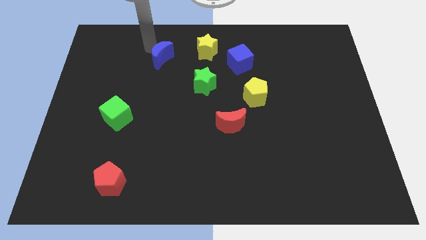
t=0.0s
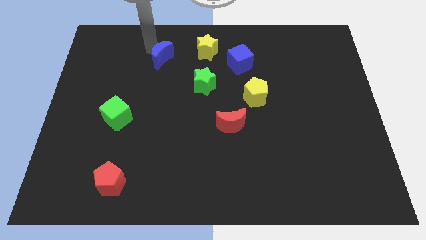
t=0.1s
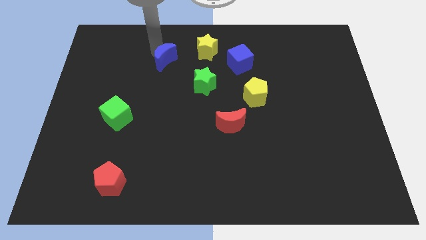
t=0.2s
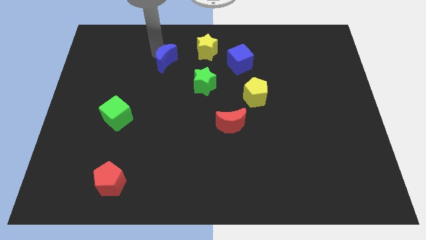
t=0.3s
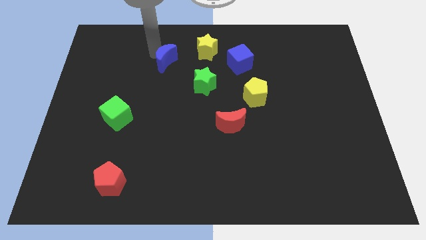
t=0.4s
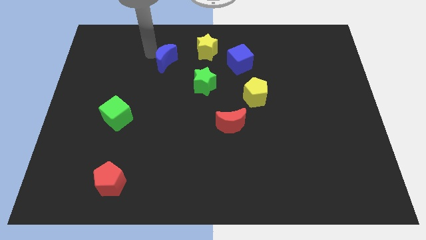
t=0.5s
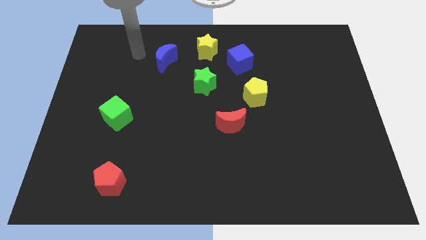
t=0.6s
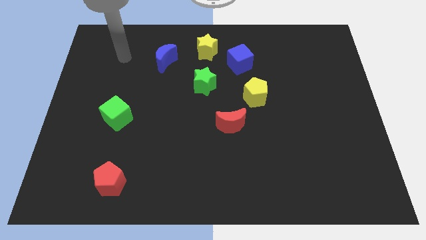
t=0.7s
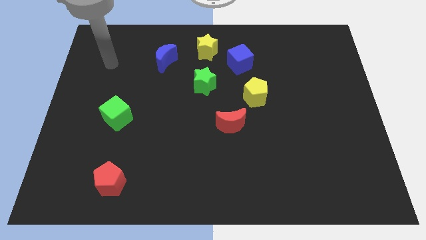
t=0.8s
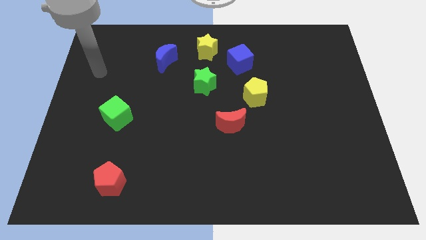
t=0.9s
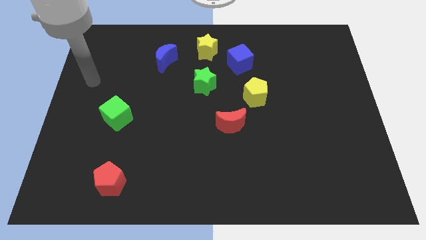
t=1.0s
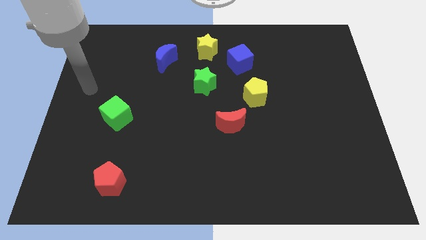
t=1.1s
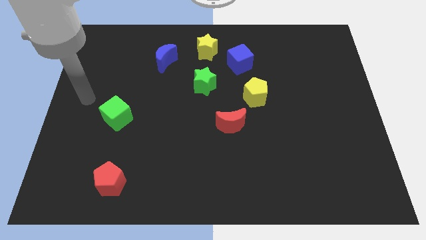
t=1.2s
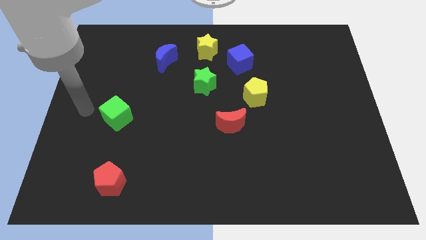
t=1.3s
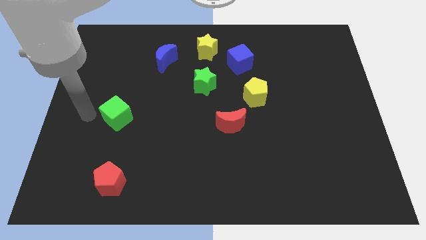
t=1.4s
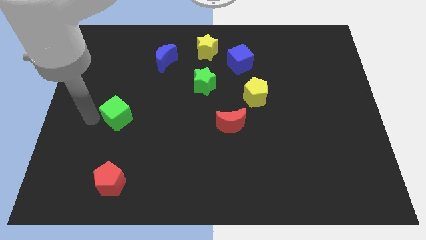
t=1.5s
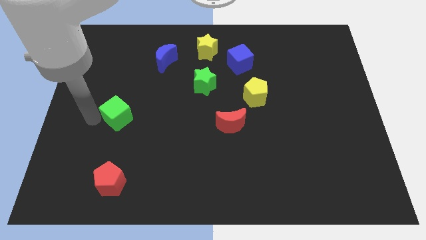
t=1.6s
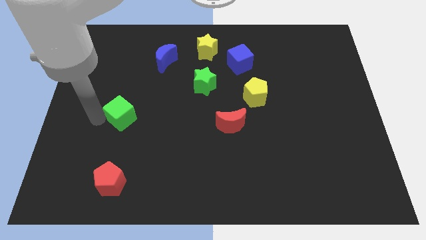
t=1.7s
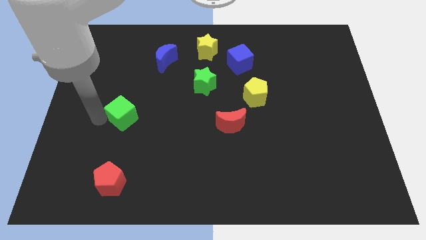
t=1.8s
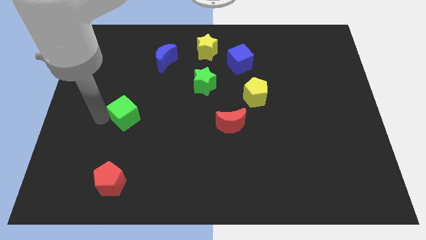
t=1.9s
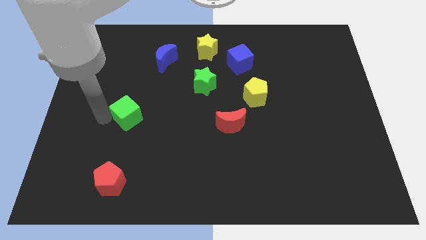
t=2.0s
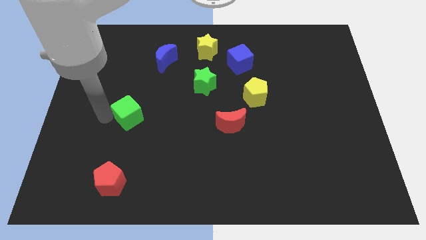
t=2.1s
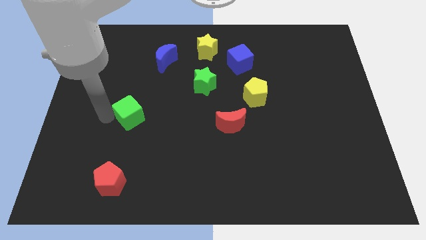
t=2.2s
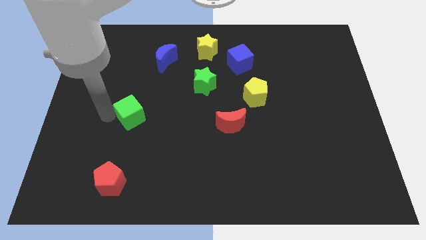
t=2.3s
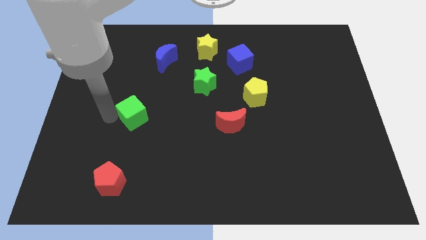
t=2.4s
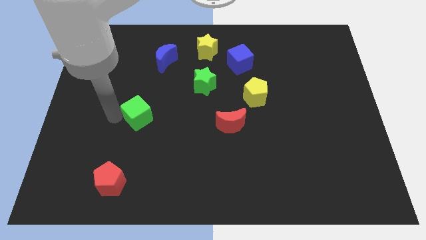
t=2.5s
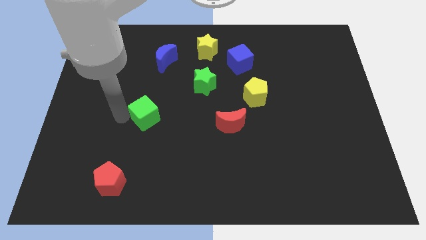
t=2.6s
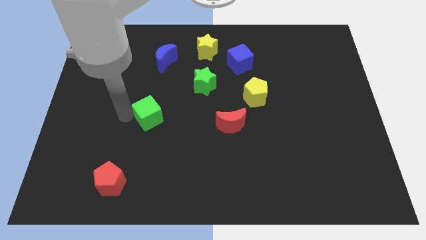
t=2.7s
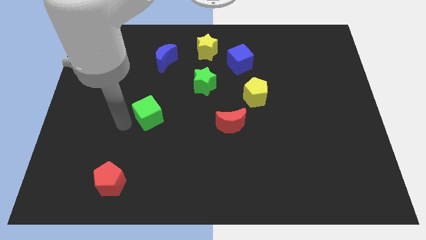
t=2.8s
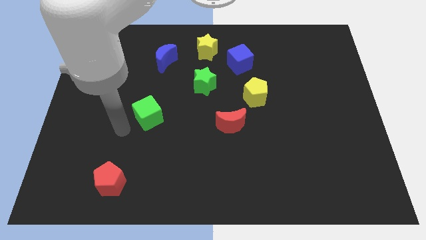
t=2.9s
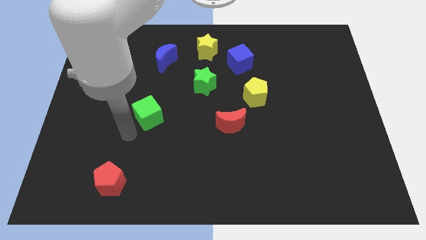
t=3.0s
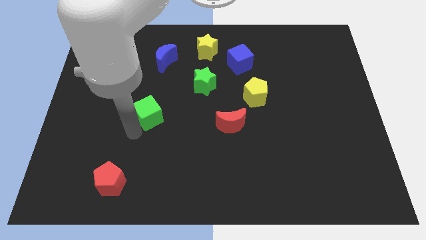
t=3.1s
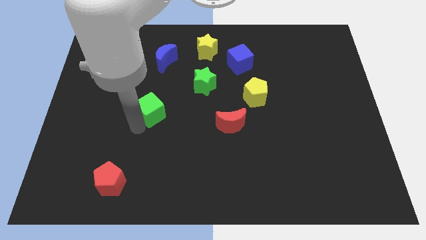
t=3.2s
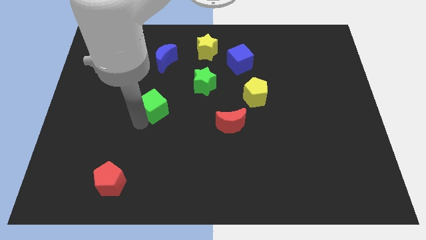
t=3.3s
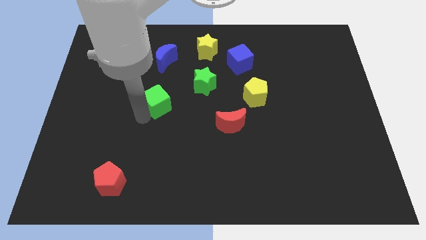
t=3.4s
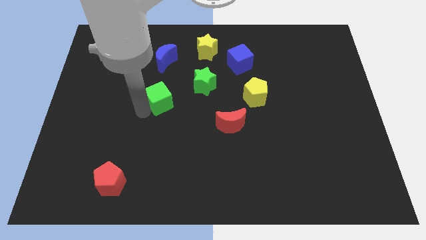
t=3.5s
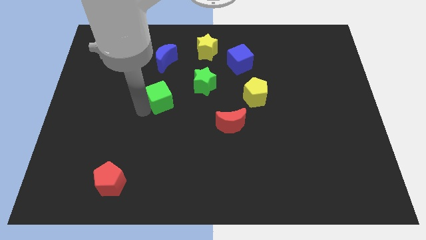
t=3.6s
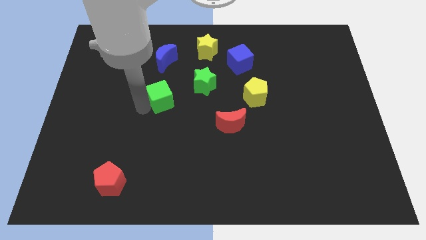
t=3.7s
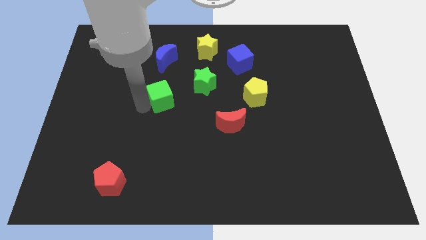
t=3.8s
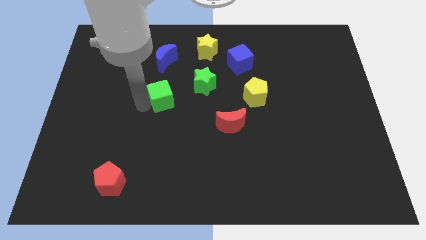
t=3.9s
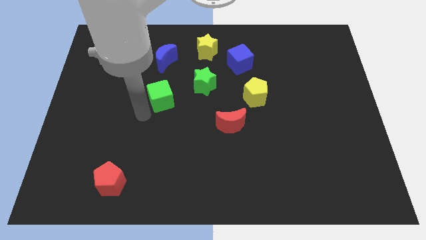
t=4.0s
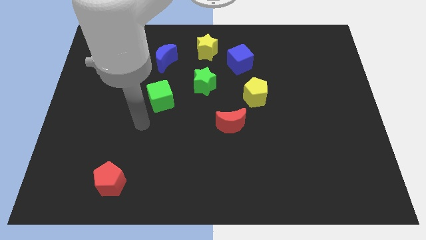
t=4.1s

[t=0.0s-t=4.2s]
move green cube towards blue crescent

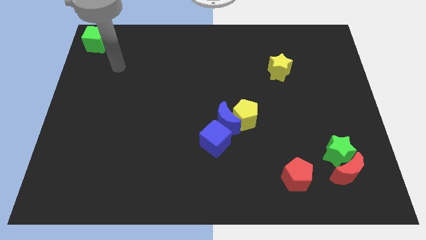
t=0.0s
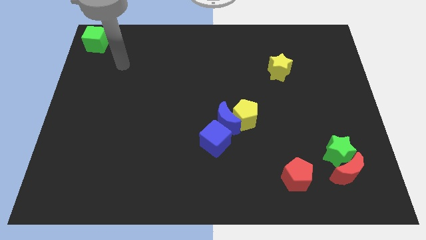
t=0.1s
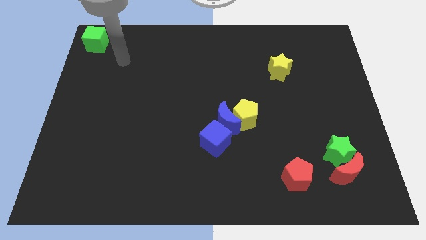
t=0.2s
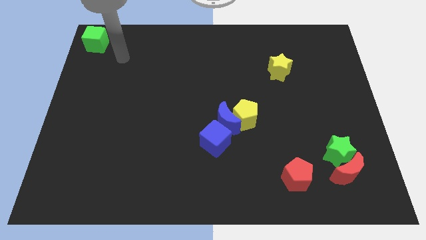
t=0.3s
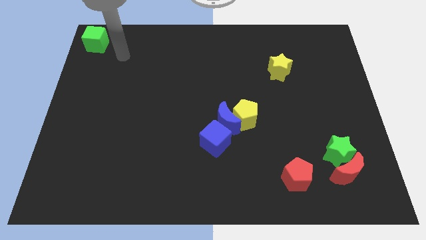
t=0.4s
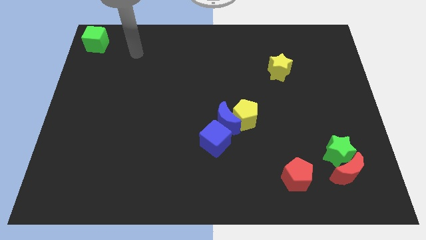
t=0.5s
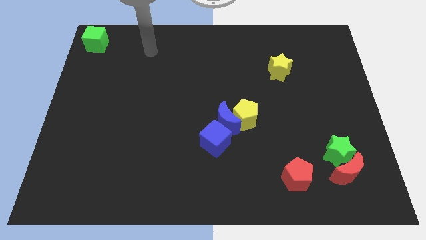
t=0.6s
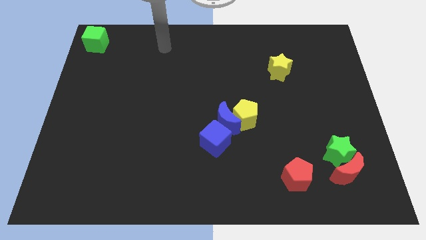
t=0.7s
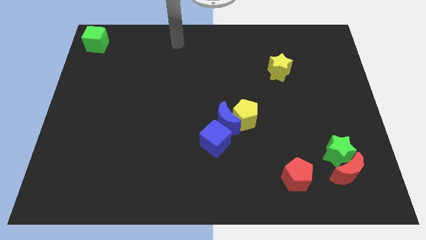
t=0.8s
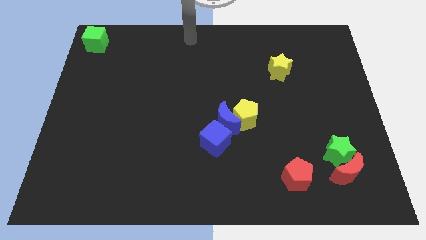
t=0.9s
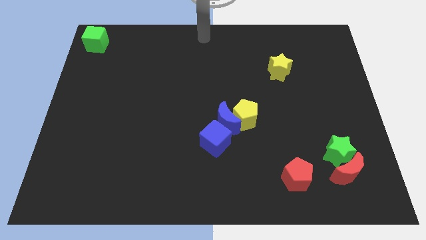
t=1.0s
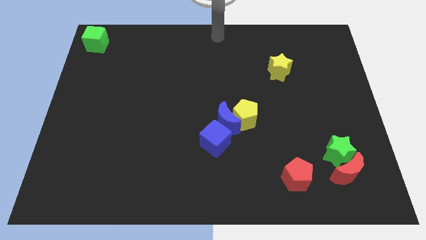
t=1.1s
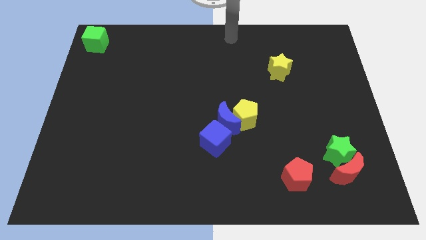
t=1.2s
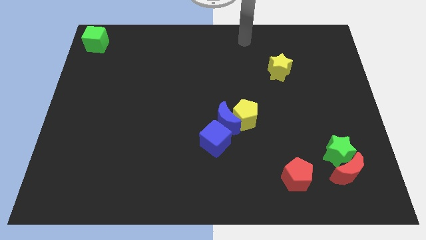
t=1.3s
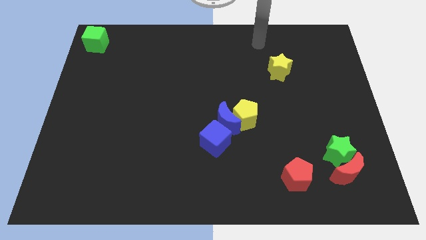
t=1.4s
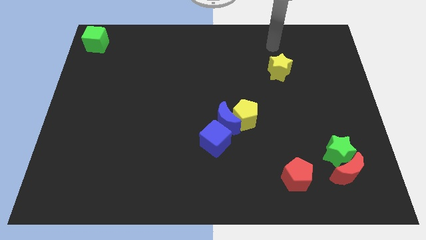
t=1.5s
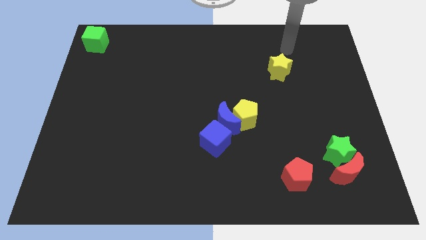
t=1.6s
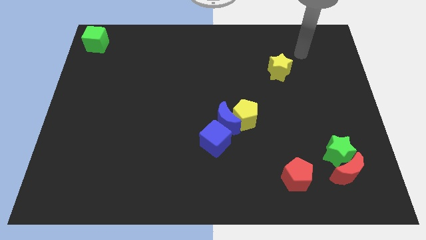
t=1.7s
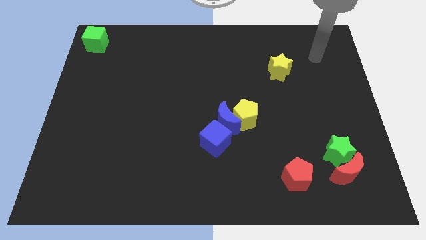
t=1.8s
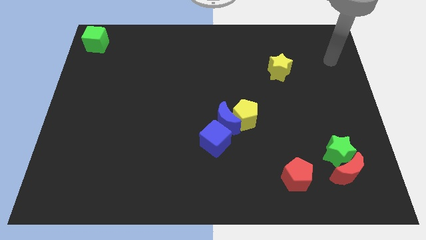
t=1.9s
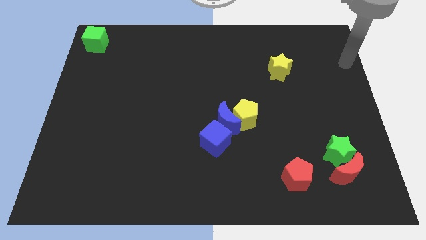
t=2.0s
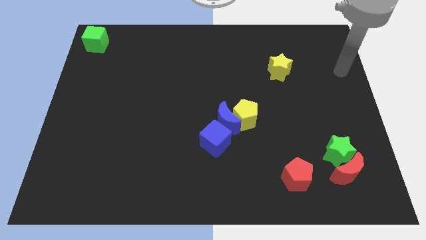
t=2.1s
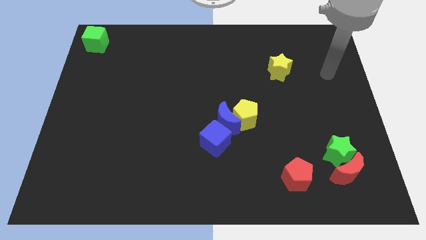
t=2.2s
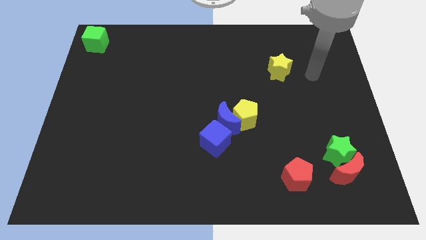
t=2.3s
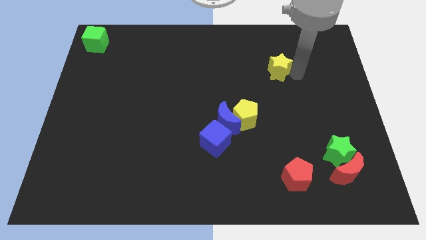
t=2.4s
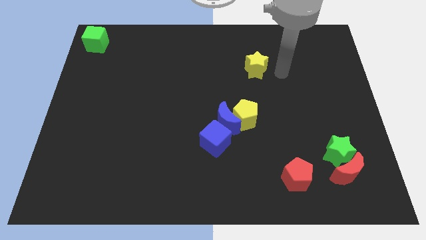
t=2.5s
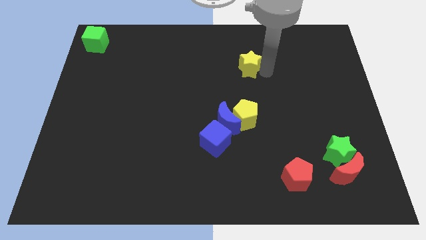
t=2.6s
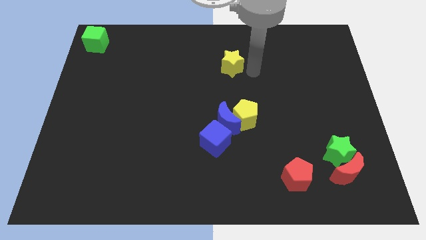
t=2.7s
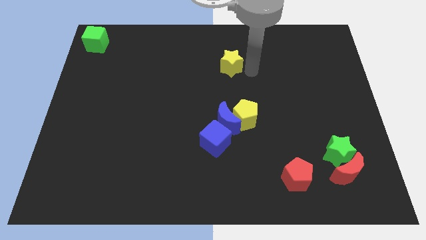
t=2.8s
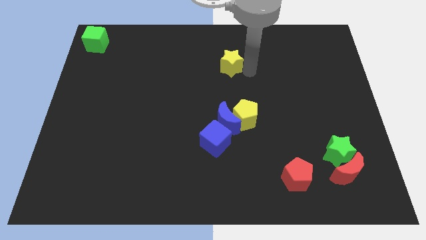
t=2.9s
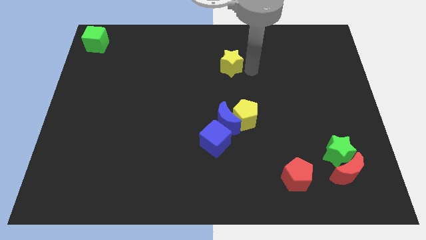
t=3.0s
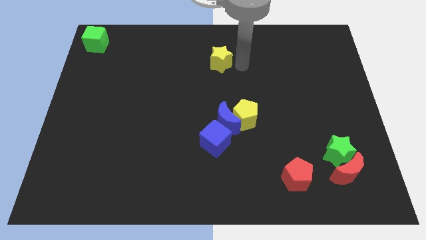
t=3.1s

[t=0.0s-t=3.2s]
place the yellow star on the top of the blue moon vertically

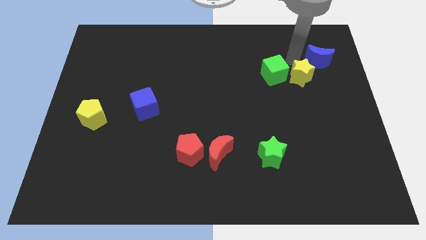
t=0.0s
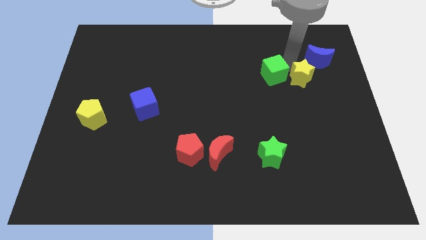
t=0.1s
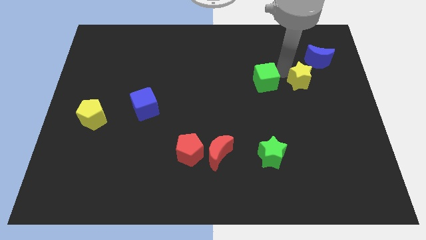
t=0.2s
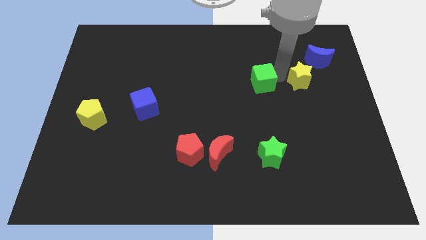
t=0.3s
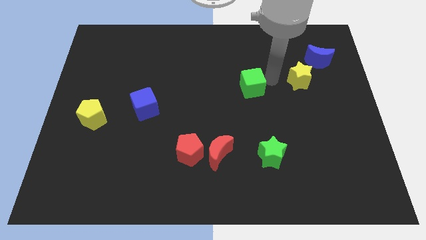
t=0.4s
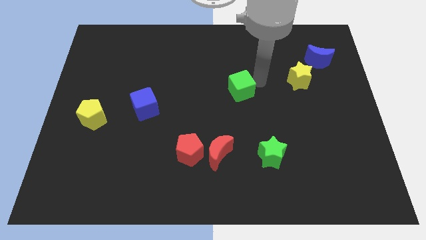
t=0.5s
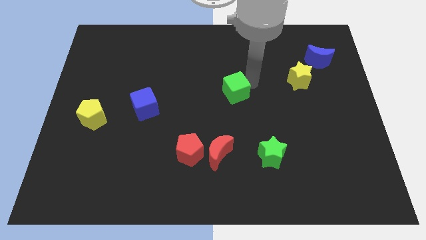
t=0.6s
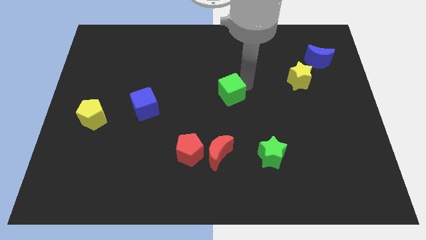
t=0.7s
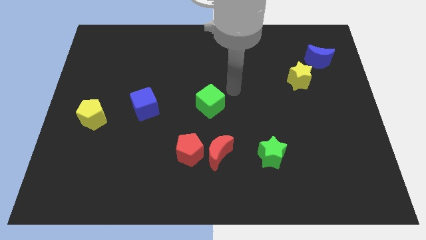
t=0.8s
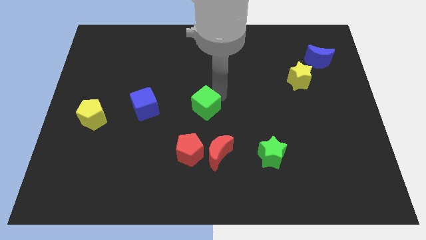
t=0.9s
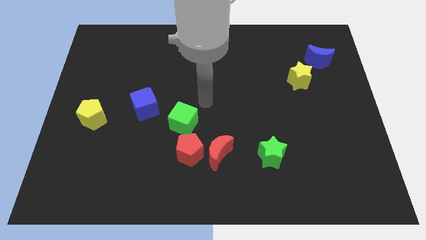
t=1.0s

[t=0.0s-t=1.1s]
separate green cube from yellow star

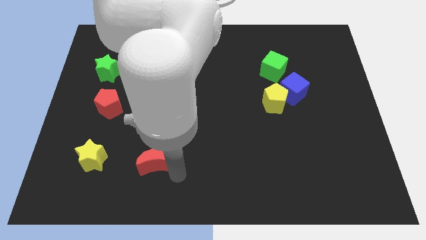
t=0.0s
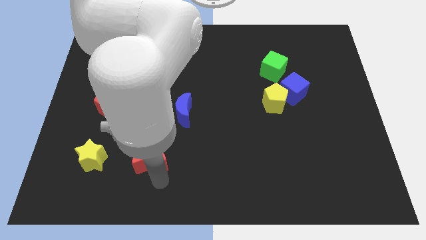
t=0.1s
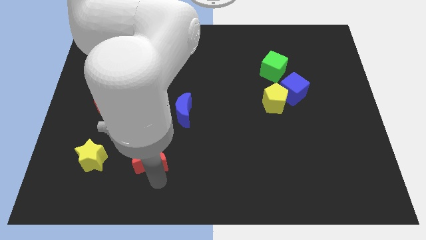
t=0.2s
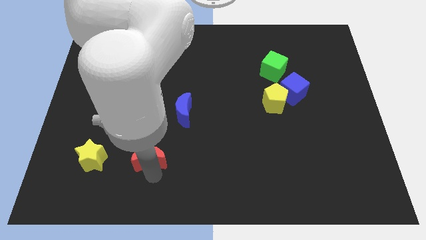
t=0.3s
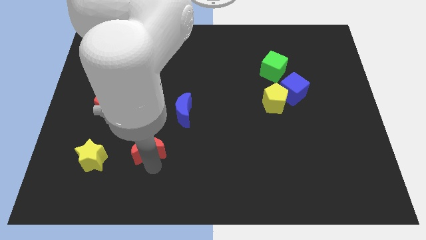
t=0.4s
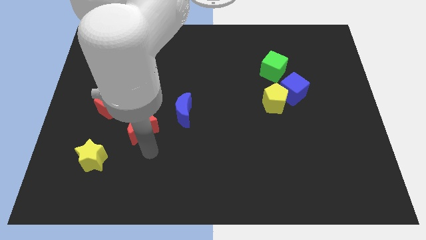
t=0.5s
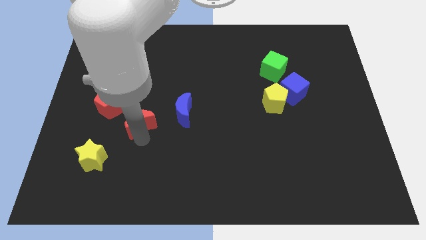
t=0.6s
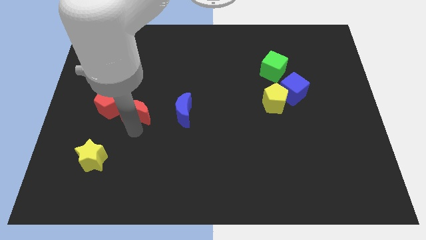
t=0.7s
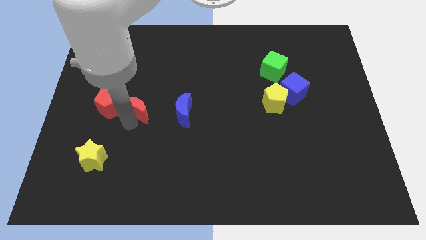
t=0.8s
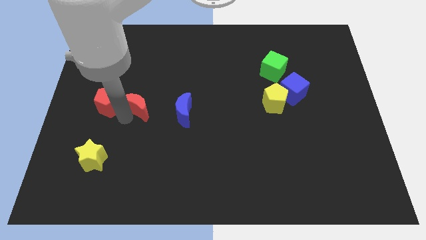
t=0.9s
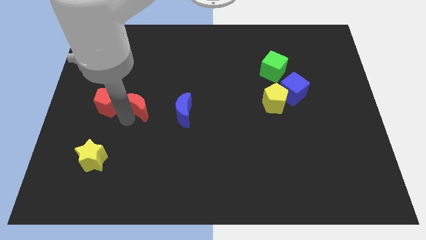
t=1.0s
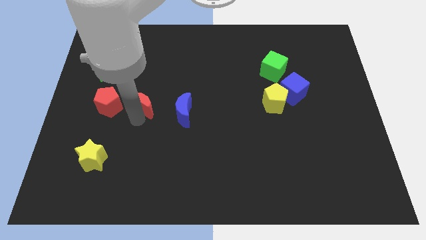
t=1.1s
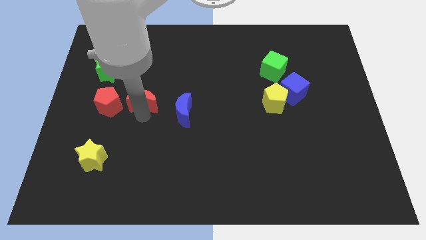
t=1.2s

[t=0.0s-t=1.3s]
push the red crescent between red pentagon and blue moon
